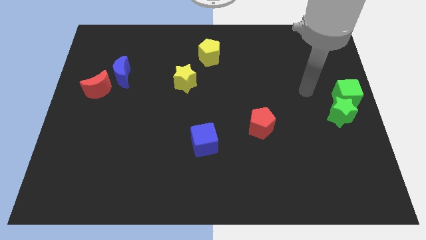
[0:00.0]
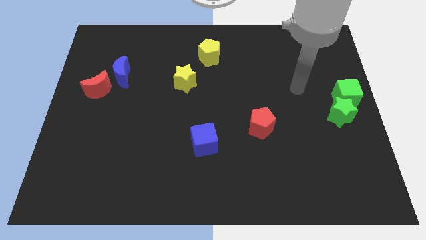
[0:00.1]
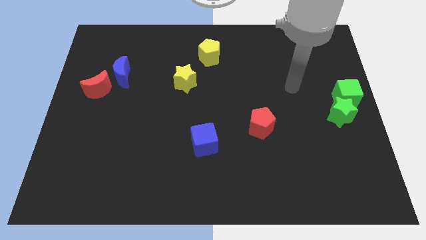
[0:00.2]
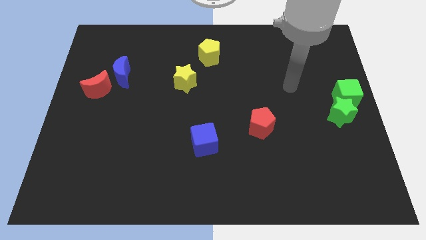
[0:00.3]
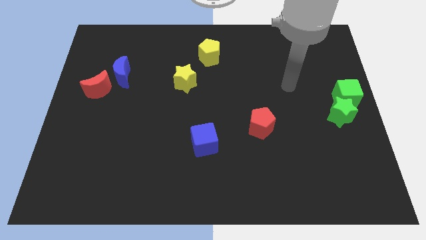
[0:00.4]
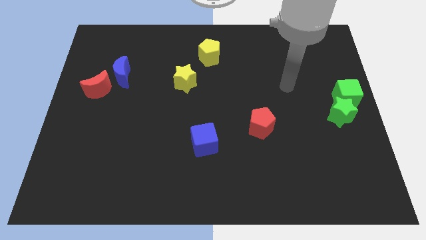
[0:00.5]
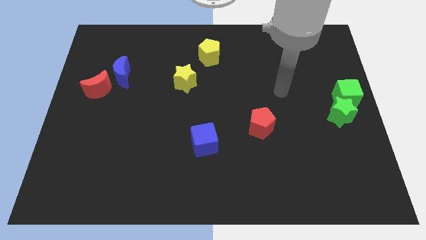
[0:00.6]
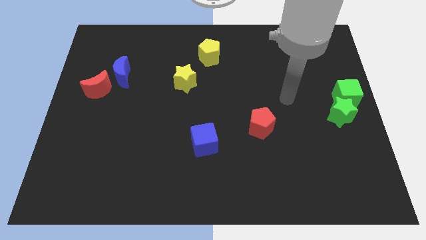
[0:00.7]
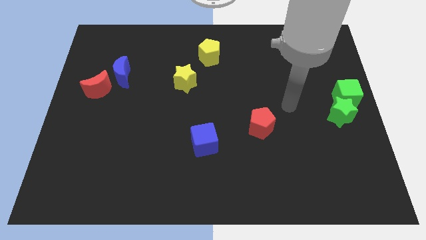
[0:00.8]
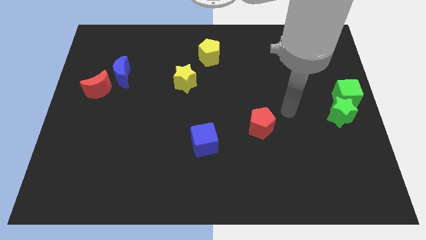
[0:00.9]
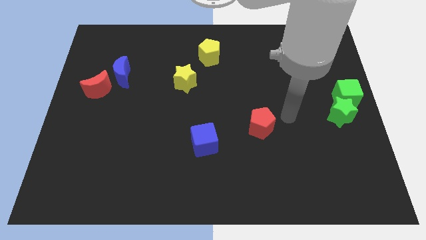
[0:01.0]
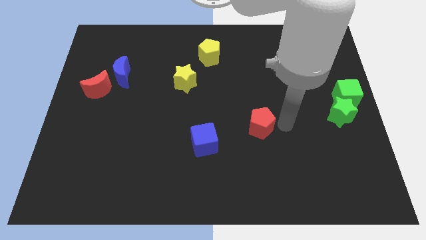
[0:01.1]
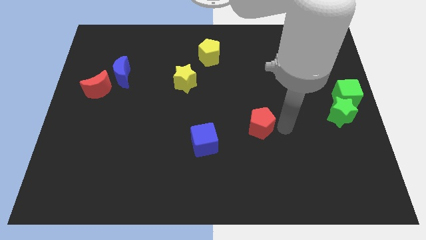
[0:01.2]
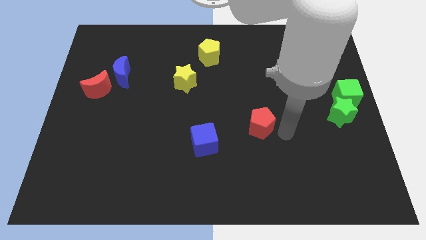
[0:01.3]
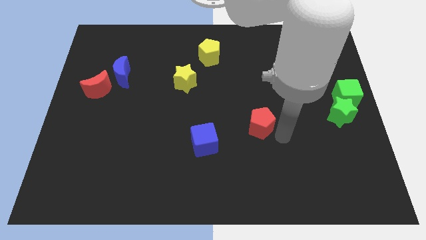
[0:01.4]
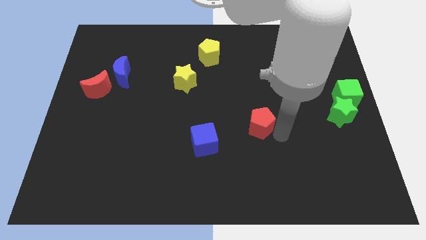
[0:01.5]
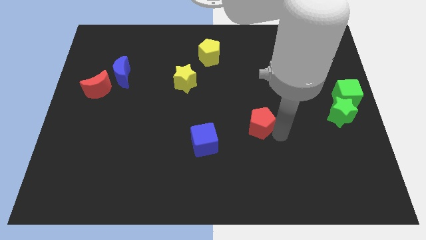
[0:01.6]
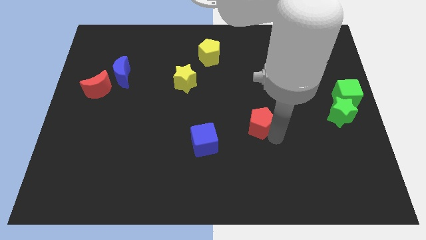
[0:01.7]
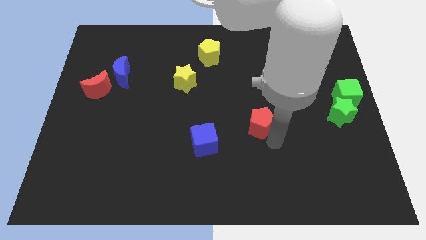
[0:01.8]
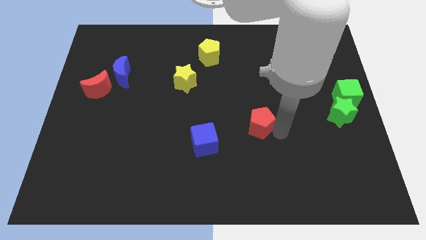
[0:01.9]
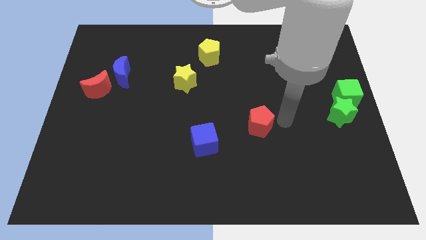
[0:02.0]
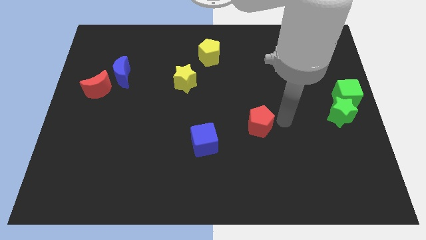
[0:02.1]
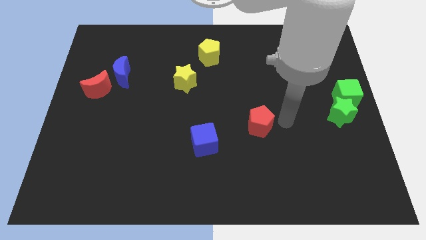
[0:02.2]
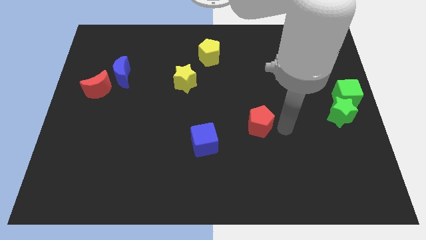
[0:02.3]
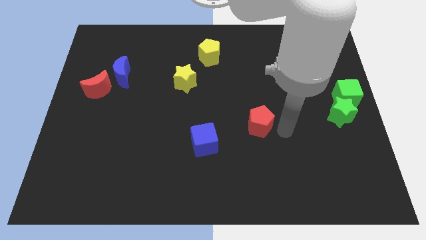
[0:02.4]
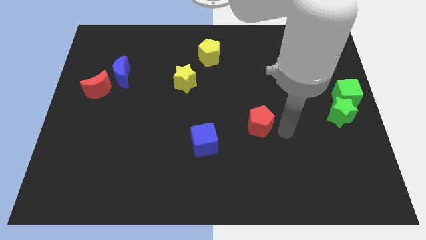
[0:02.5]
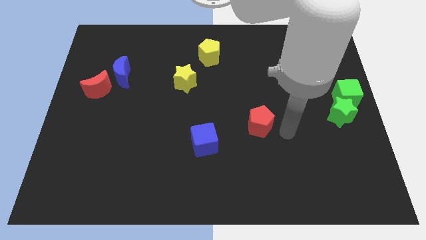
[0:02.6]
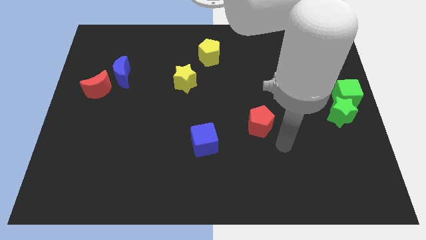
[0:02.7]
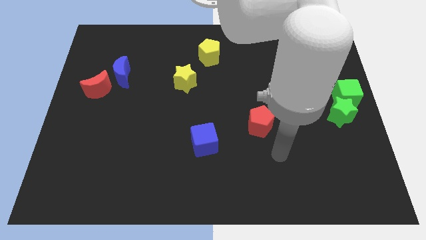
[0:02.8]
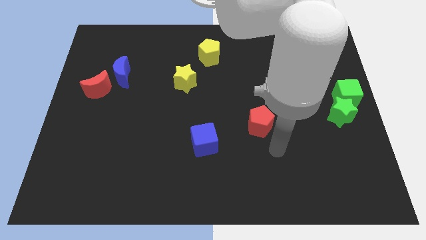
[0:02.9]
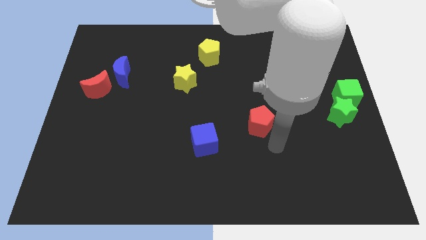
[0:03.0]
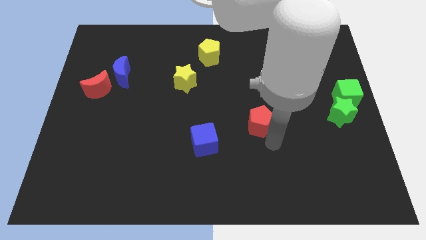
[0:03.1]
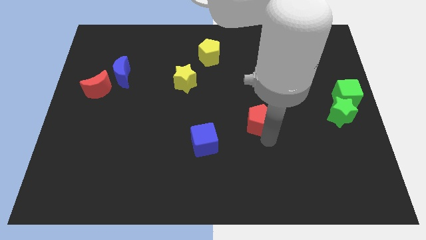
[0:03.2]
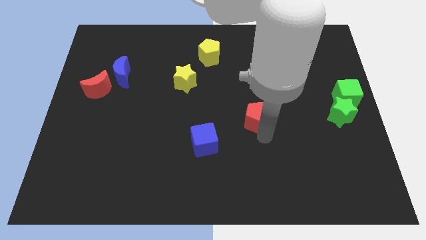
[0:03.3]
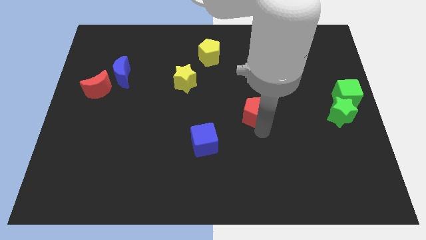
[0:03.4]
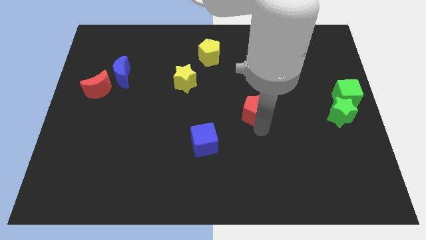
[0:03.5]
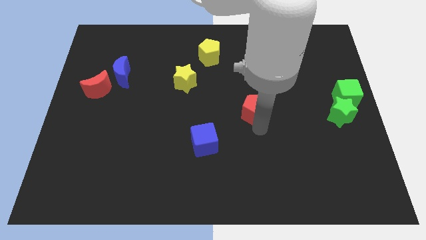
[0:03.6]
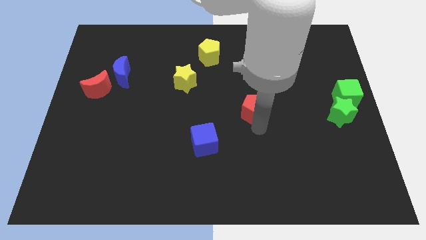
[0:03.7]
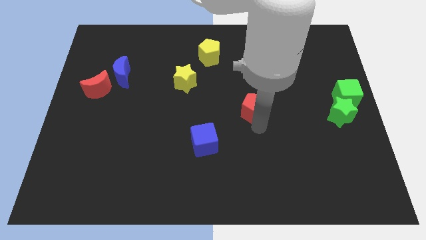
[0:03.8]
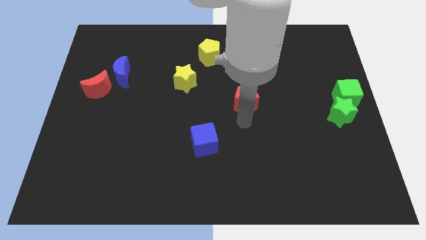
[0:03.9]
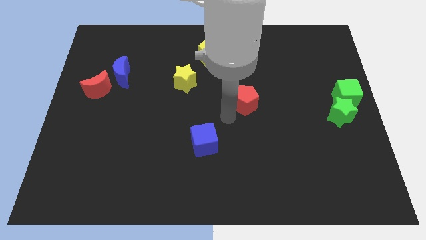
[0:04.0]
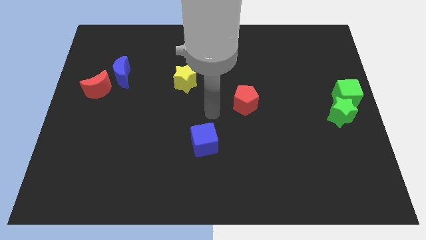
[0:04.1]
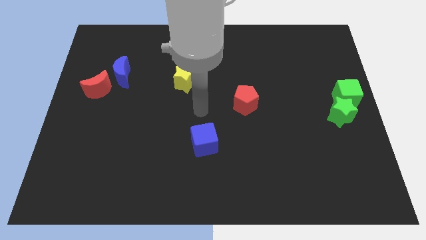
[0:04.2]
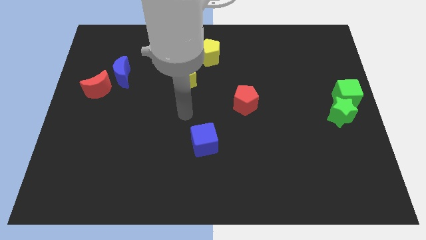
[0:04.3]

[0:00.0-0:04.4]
push the red pentagon to the top of the board

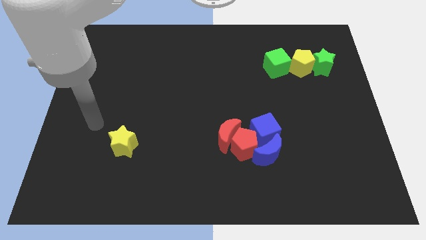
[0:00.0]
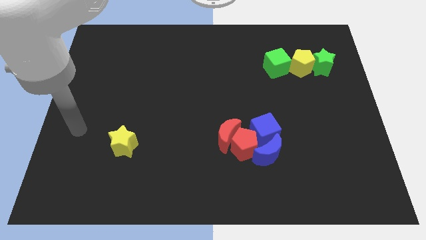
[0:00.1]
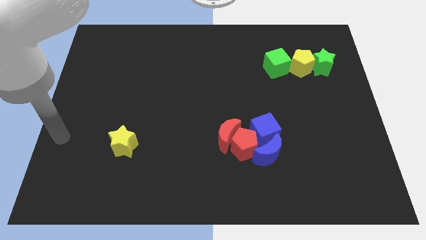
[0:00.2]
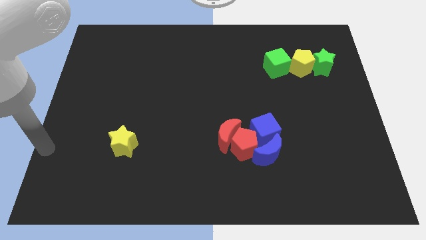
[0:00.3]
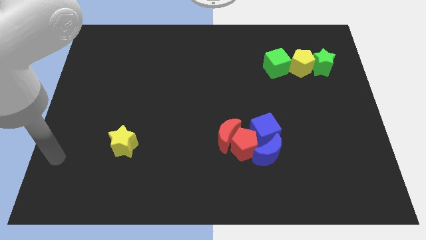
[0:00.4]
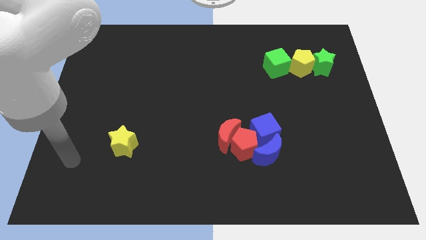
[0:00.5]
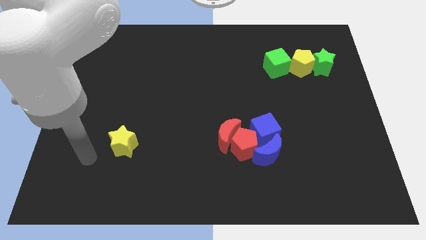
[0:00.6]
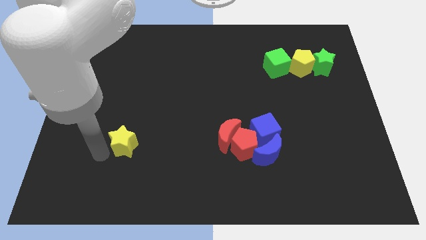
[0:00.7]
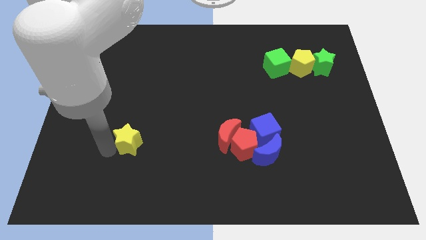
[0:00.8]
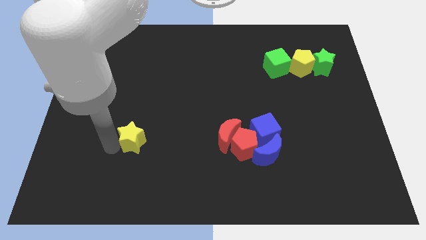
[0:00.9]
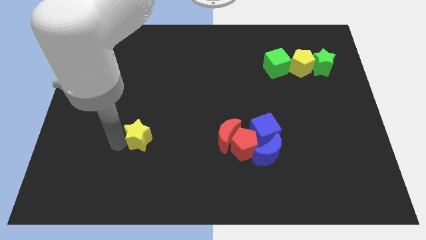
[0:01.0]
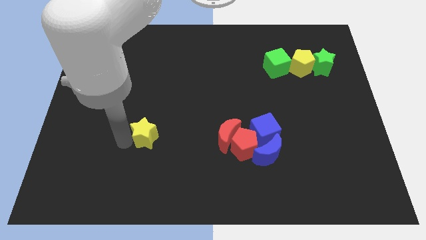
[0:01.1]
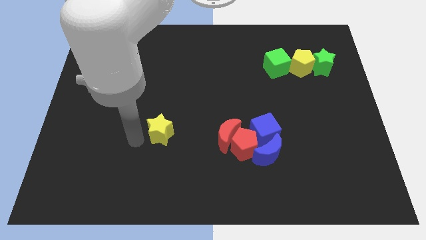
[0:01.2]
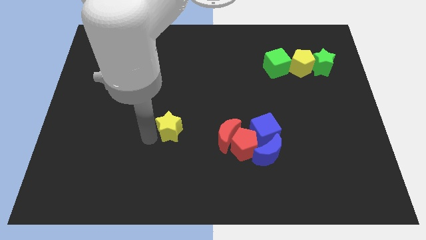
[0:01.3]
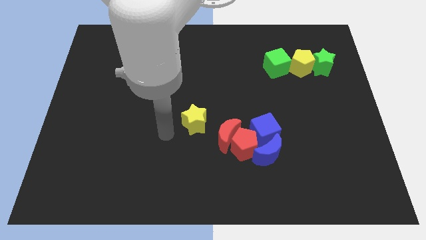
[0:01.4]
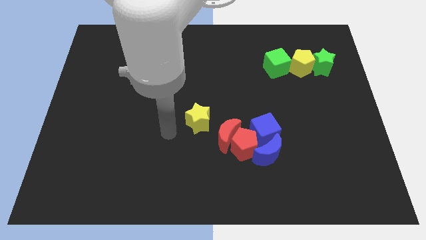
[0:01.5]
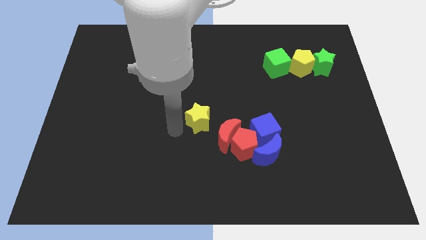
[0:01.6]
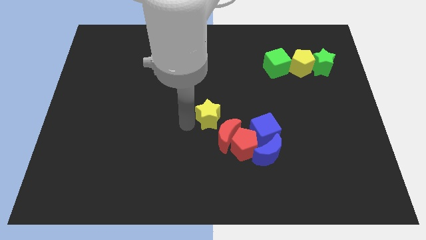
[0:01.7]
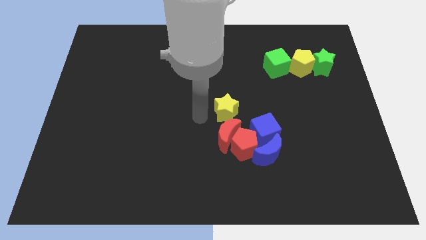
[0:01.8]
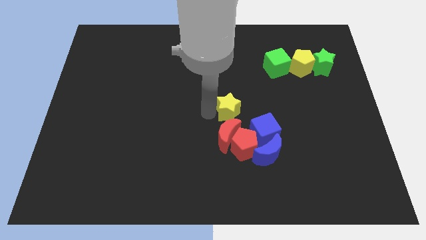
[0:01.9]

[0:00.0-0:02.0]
move the yellow star above the red blocks

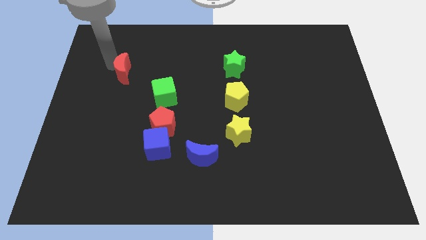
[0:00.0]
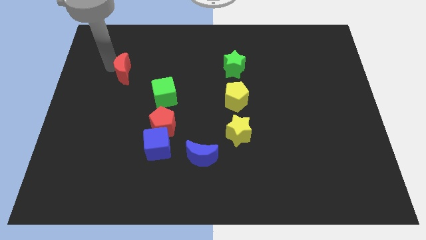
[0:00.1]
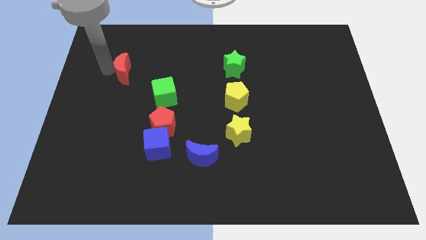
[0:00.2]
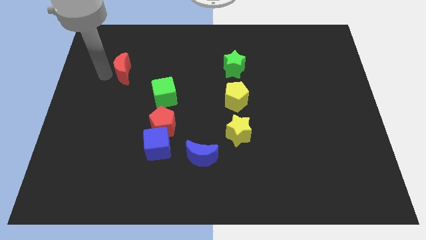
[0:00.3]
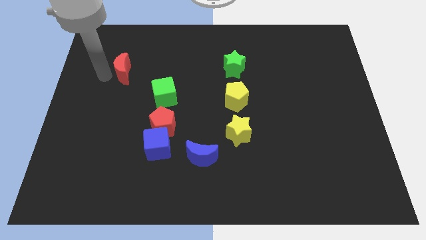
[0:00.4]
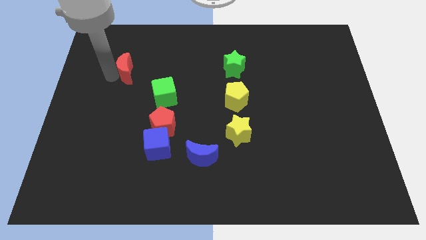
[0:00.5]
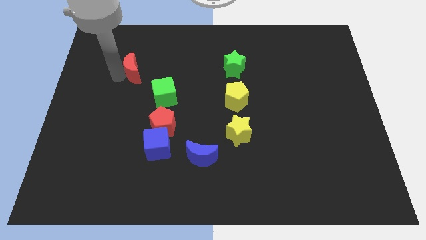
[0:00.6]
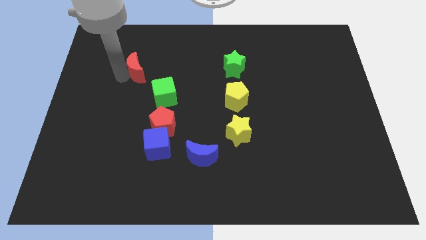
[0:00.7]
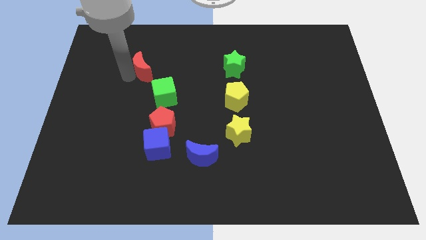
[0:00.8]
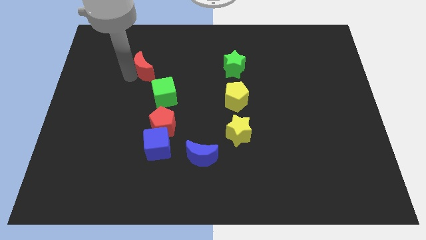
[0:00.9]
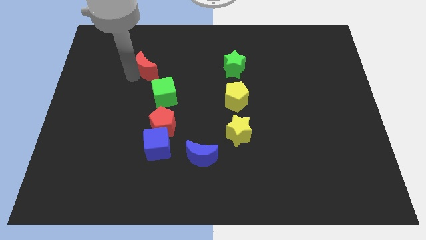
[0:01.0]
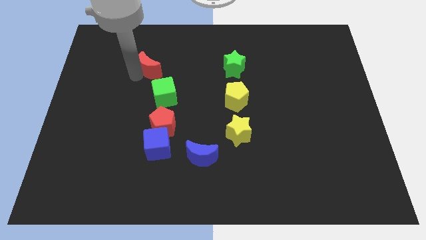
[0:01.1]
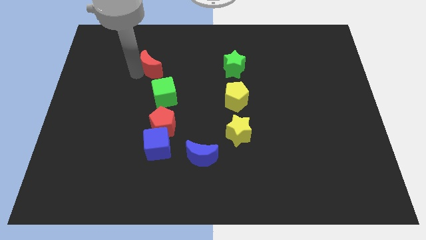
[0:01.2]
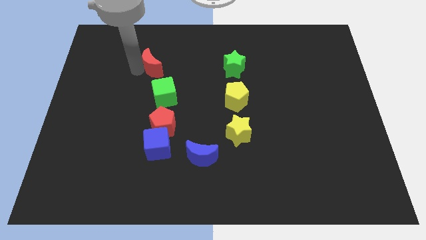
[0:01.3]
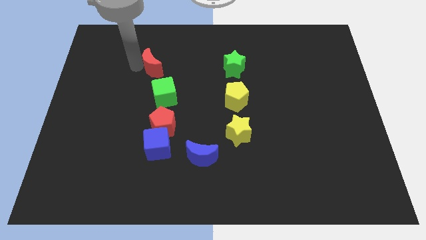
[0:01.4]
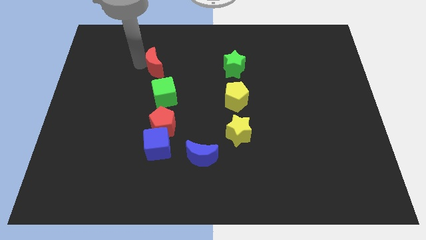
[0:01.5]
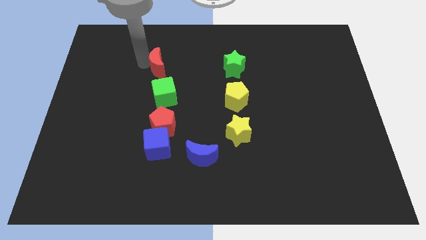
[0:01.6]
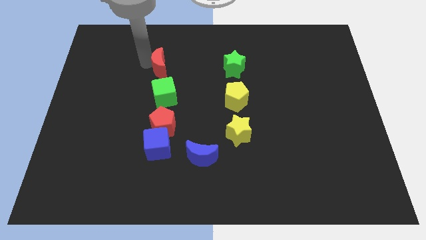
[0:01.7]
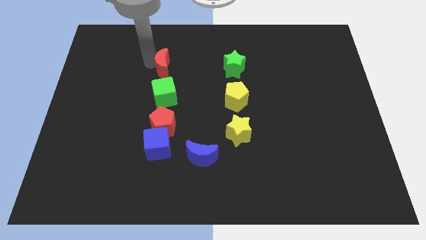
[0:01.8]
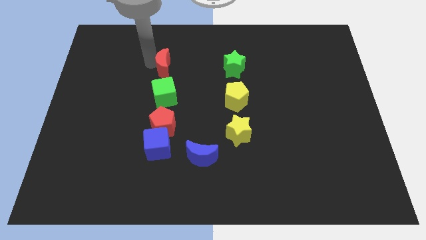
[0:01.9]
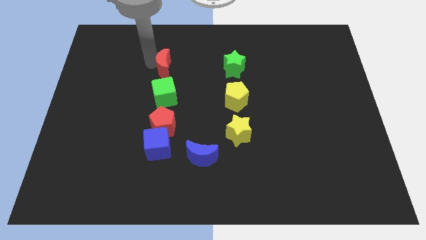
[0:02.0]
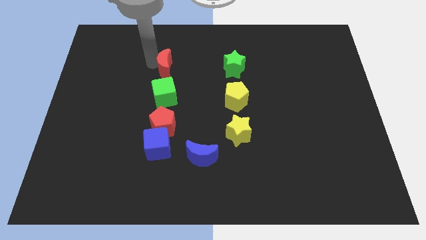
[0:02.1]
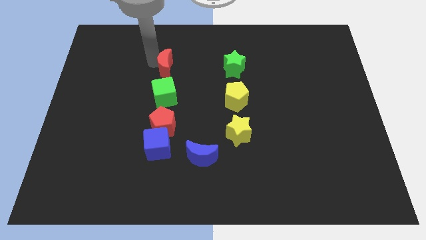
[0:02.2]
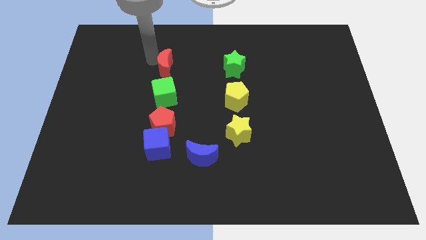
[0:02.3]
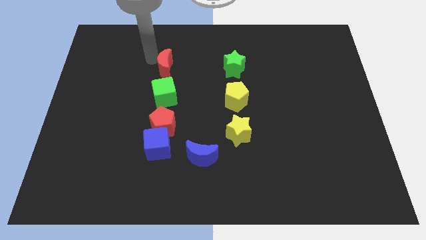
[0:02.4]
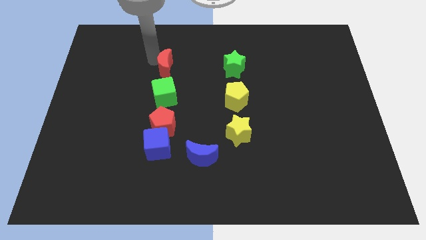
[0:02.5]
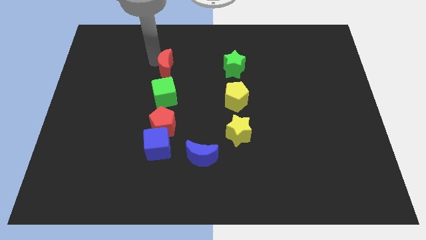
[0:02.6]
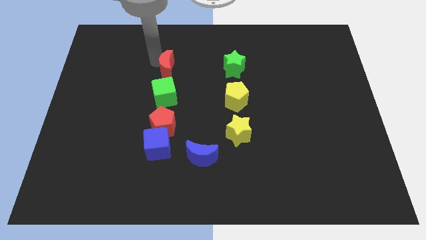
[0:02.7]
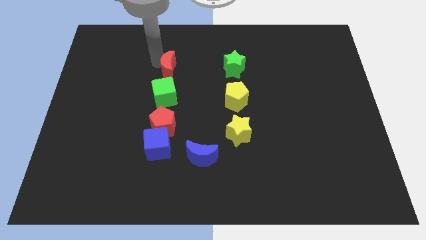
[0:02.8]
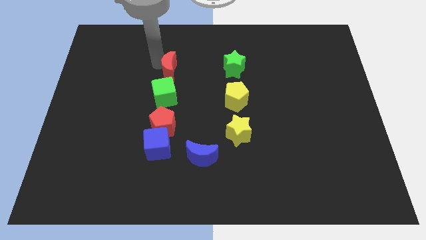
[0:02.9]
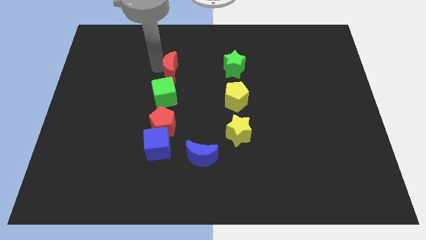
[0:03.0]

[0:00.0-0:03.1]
push the red crescent to the top of the green cube
